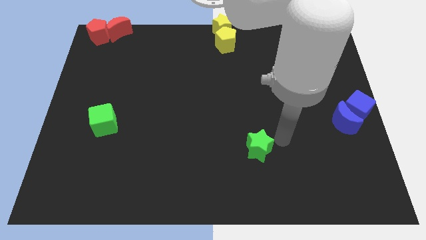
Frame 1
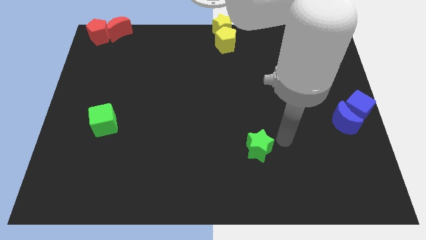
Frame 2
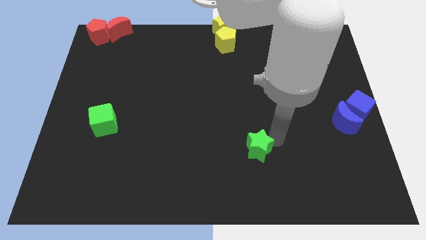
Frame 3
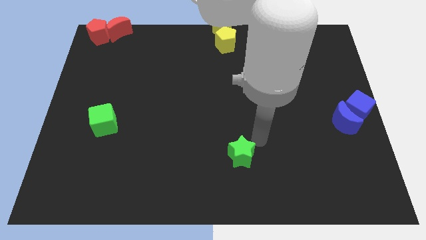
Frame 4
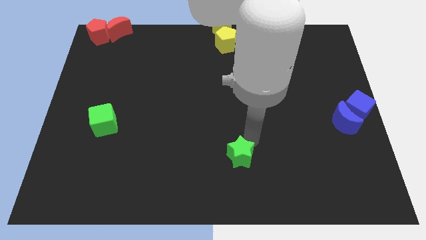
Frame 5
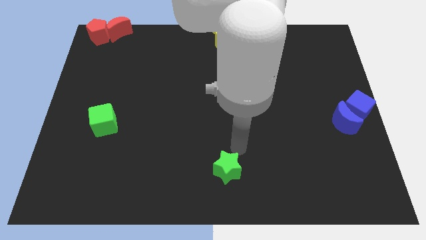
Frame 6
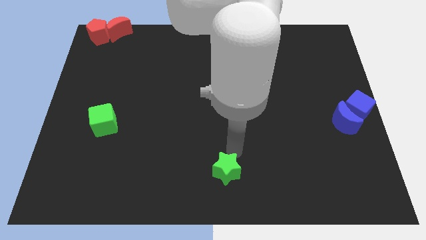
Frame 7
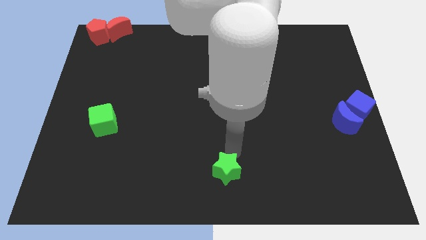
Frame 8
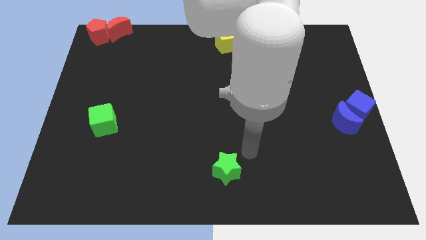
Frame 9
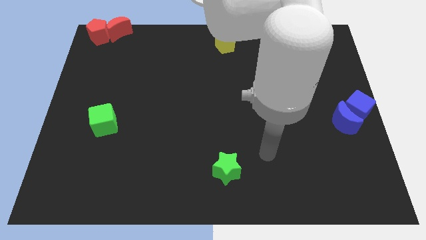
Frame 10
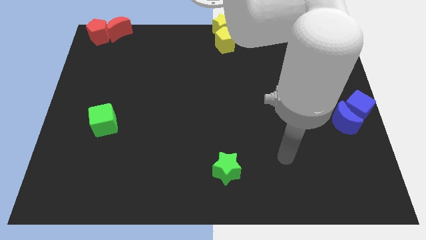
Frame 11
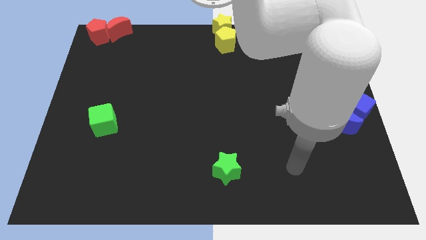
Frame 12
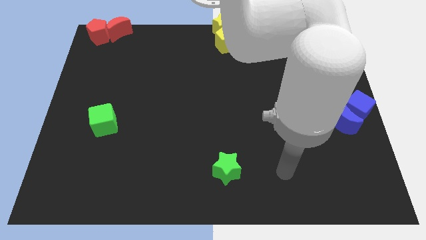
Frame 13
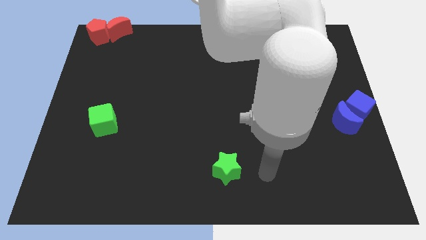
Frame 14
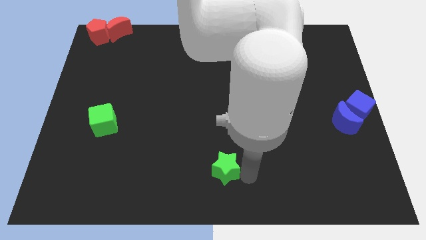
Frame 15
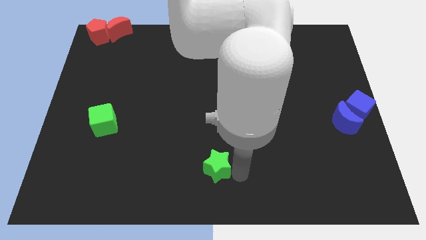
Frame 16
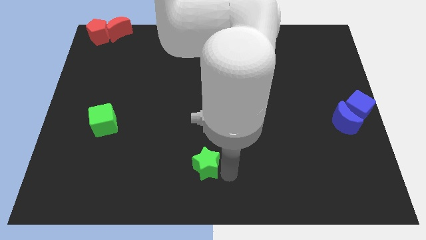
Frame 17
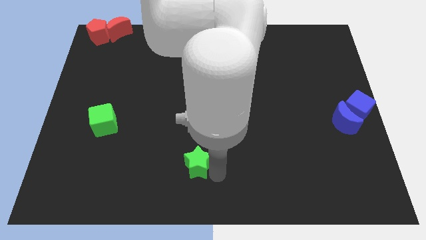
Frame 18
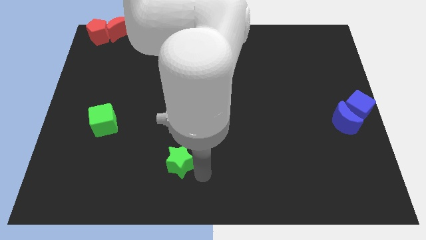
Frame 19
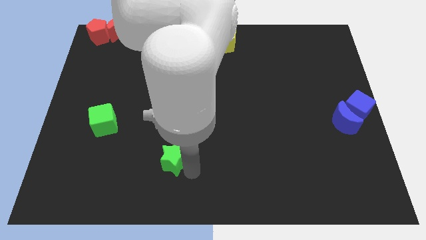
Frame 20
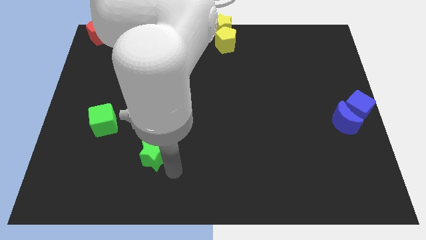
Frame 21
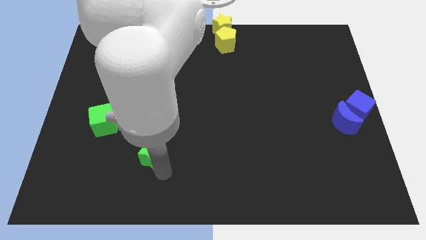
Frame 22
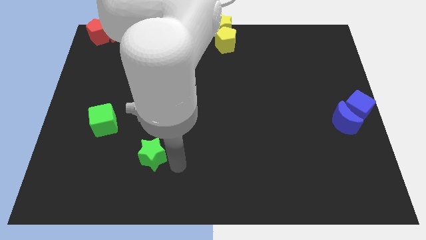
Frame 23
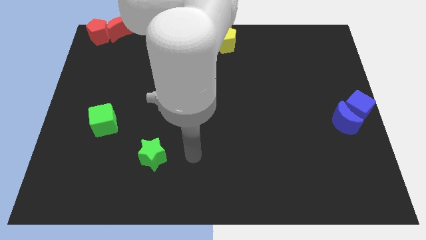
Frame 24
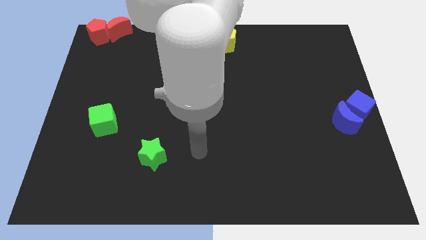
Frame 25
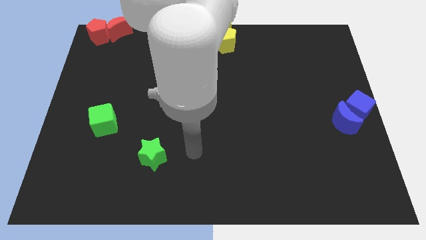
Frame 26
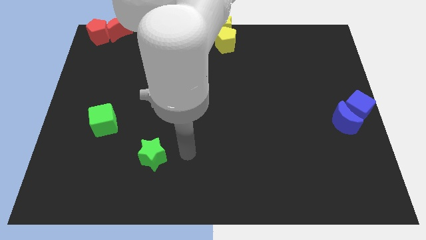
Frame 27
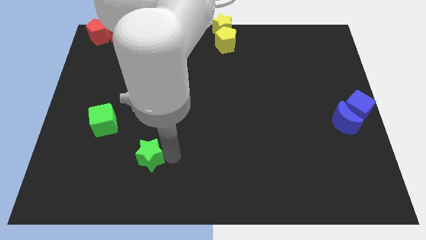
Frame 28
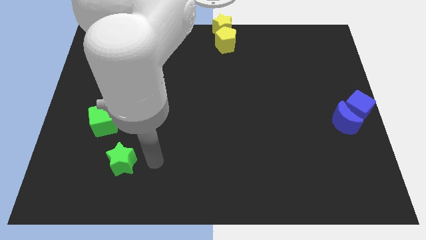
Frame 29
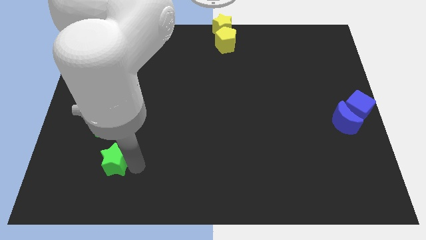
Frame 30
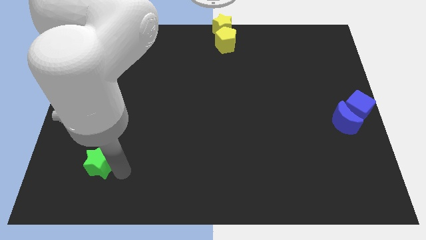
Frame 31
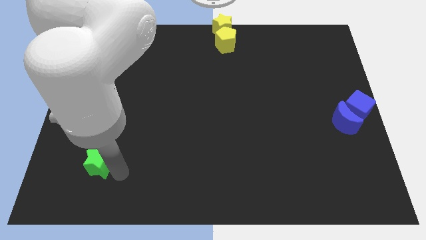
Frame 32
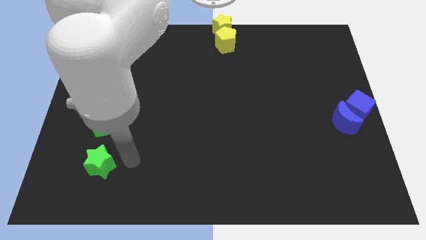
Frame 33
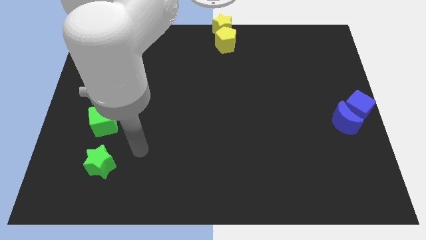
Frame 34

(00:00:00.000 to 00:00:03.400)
push the green star to the vertical bottom side of the green cube

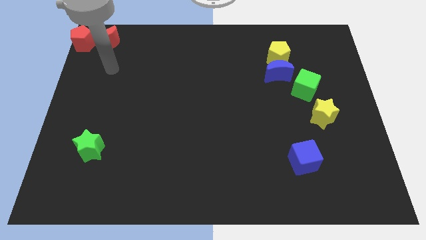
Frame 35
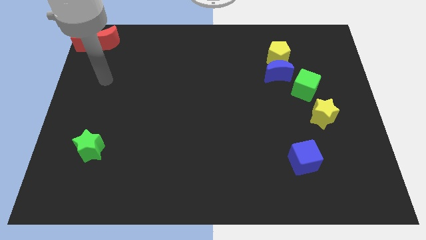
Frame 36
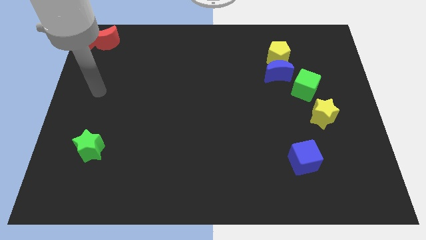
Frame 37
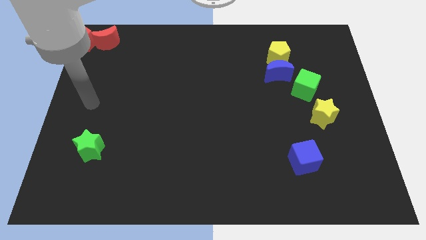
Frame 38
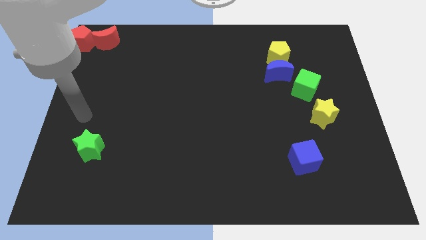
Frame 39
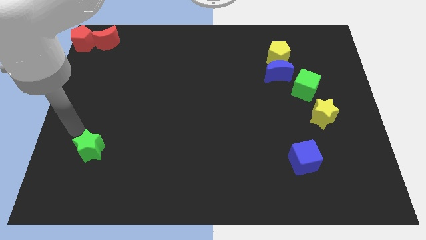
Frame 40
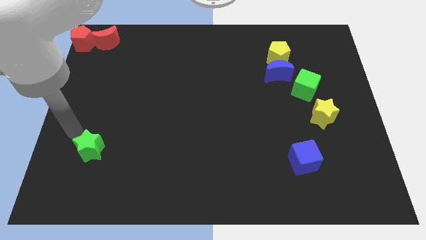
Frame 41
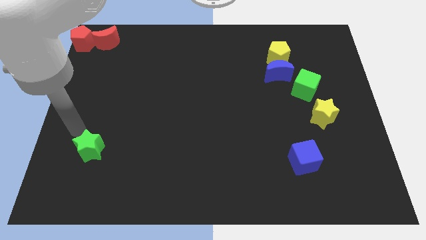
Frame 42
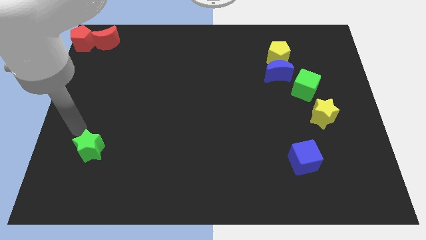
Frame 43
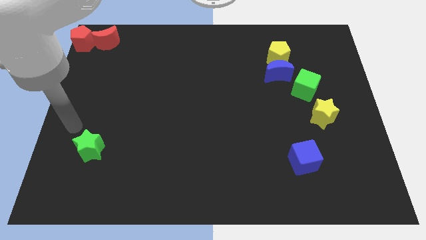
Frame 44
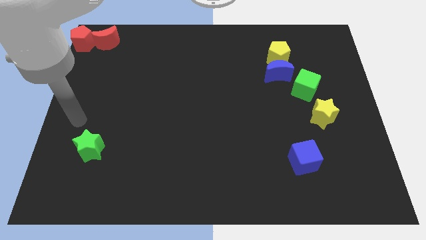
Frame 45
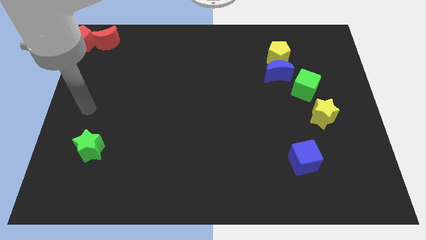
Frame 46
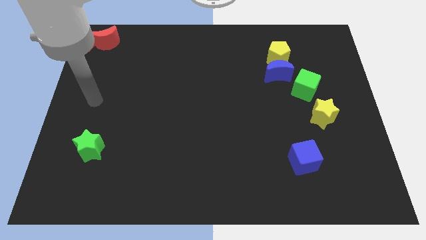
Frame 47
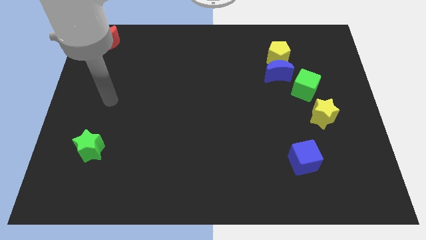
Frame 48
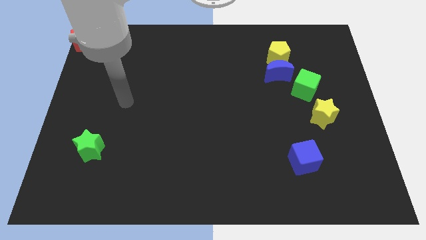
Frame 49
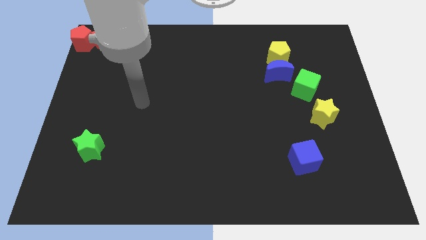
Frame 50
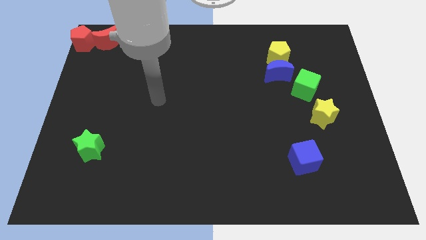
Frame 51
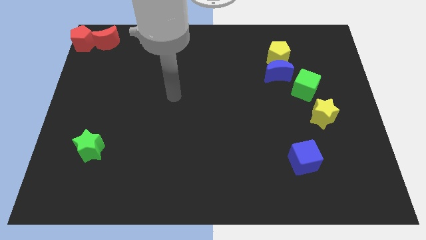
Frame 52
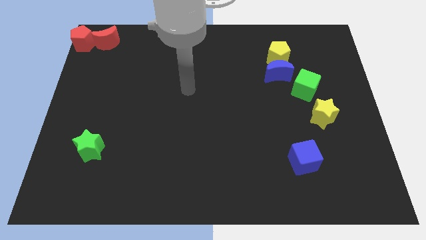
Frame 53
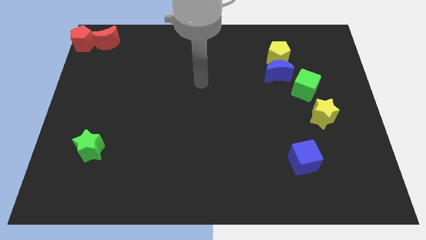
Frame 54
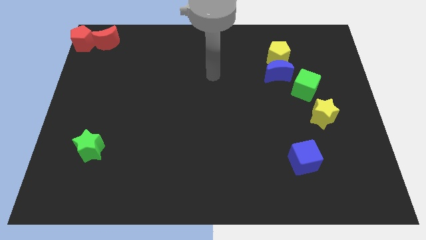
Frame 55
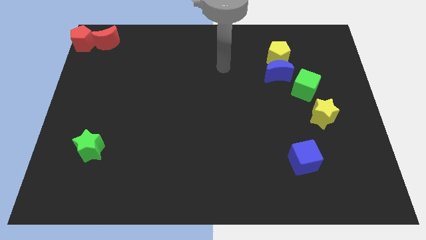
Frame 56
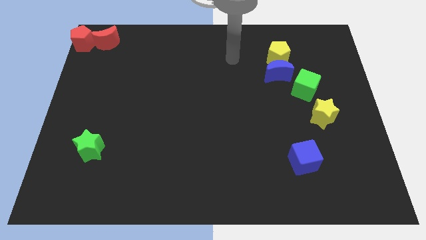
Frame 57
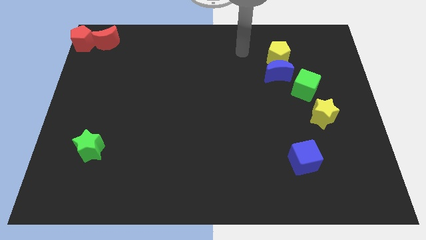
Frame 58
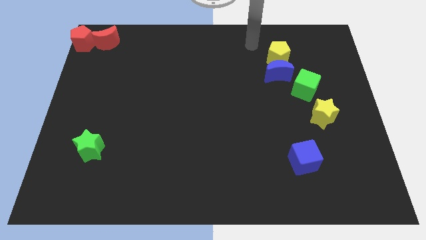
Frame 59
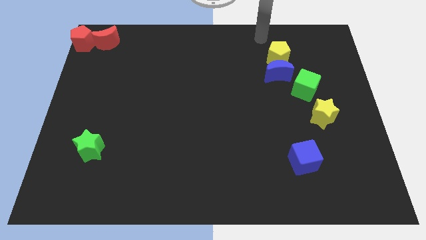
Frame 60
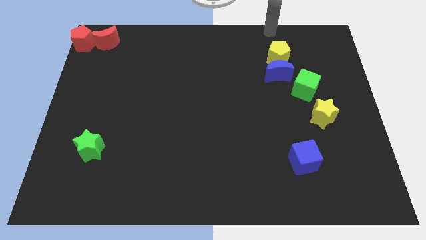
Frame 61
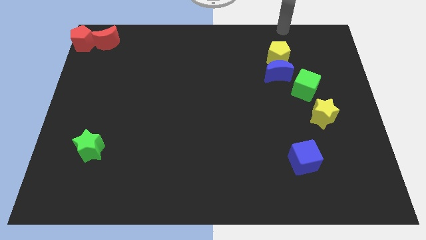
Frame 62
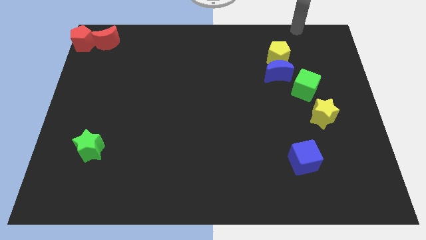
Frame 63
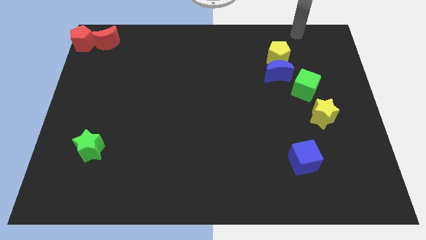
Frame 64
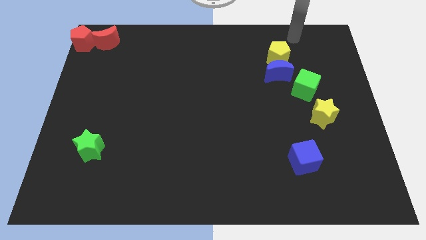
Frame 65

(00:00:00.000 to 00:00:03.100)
place your arm at the top right side of the board

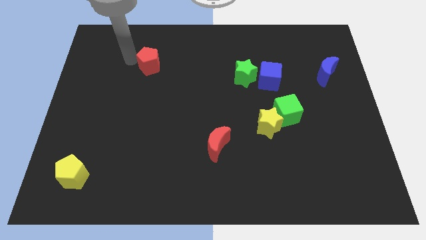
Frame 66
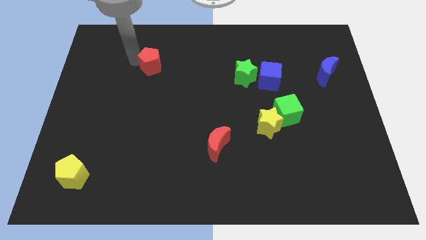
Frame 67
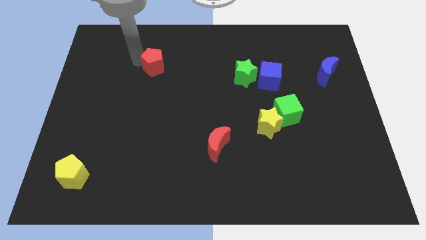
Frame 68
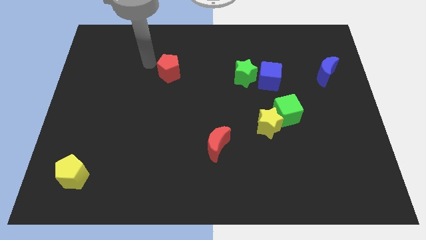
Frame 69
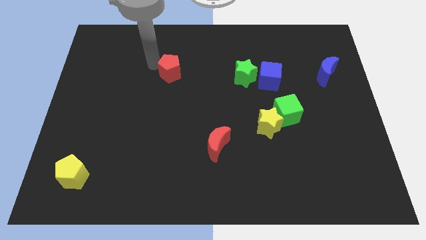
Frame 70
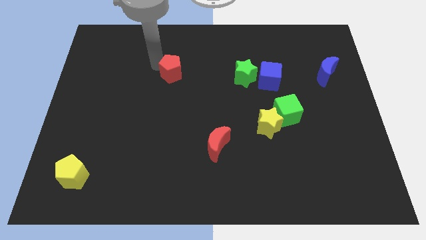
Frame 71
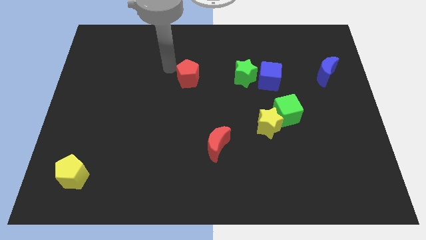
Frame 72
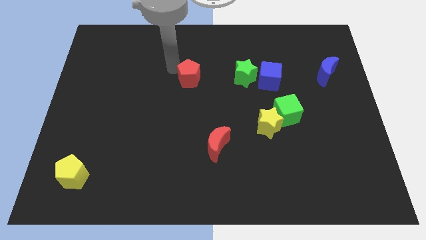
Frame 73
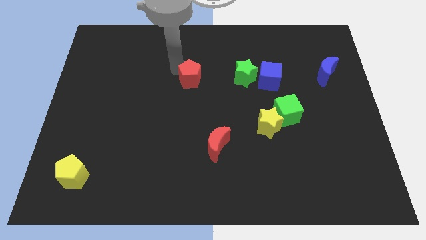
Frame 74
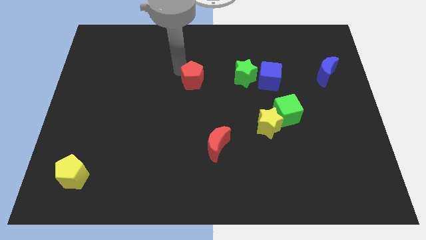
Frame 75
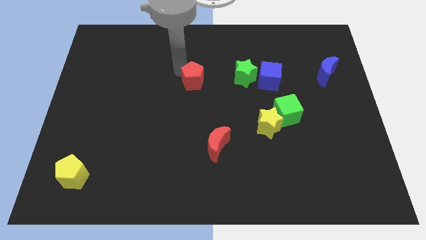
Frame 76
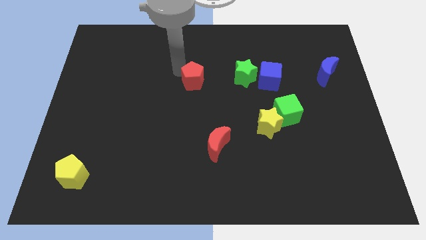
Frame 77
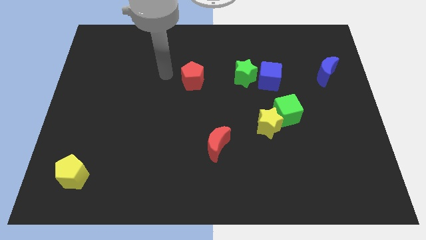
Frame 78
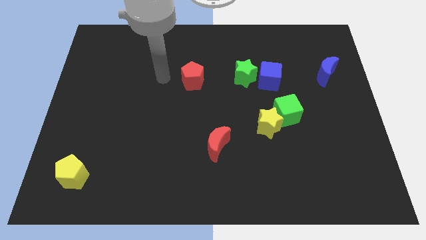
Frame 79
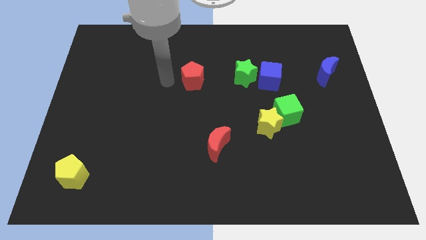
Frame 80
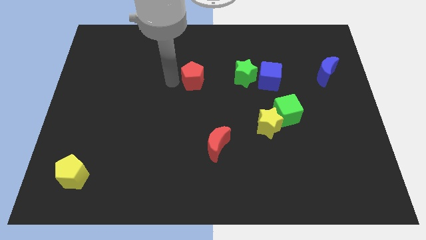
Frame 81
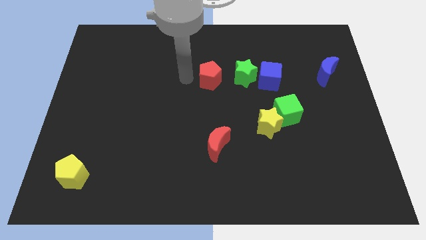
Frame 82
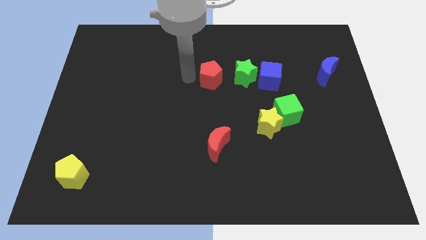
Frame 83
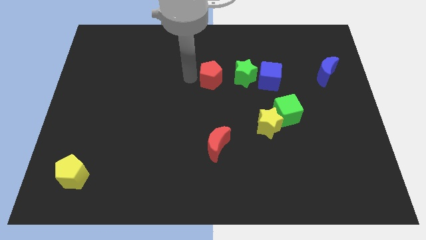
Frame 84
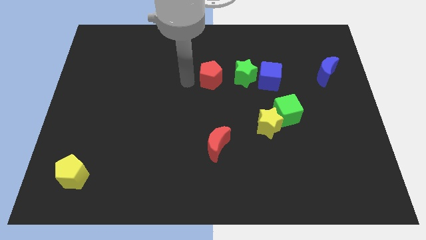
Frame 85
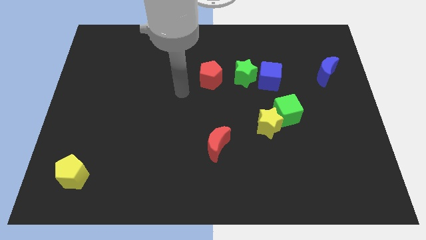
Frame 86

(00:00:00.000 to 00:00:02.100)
put the red pentagon to the left of the green star

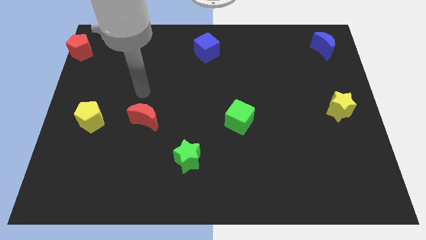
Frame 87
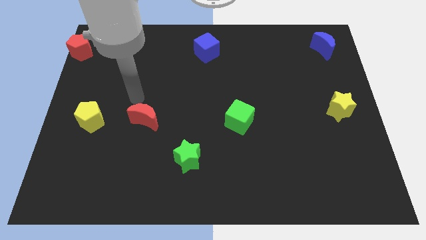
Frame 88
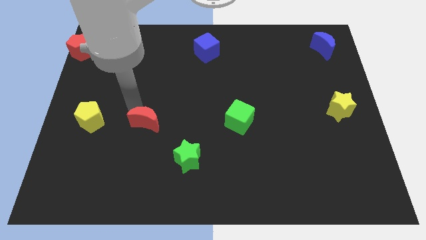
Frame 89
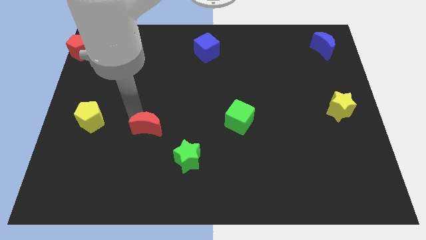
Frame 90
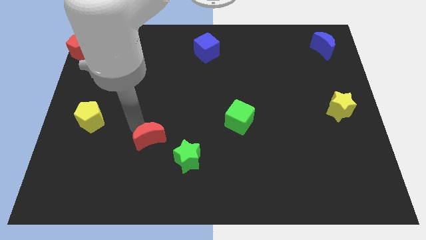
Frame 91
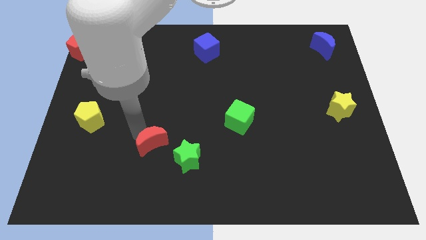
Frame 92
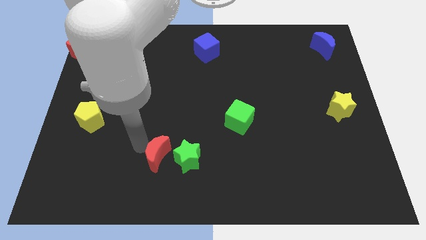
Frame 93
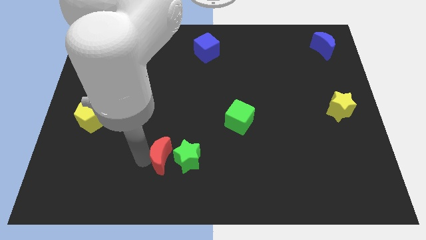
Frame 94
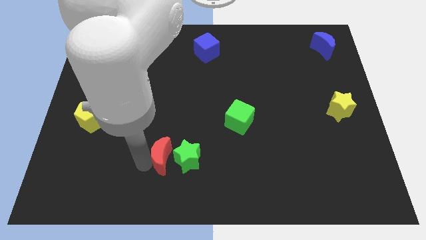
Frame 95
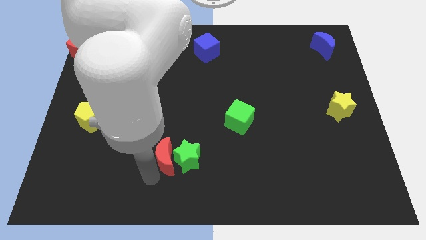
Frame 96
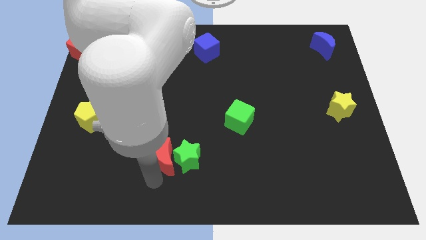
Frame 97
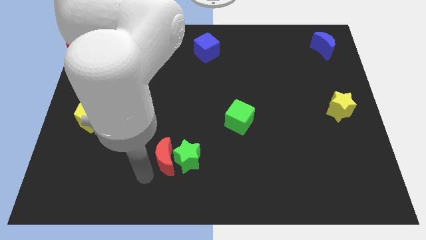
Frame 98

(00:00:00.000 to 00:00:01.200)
push the red crescent left to the green star
